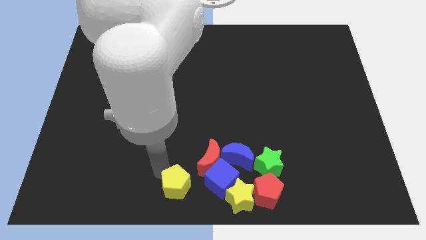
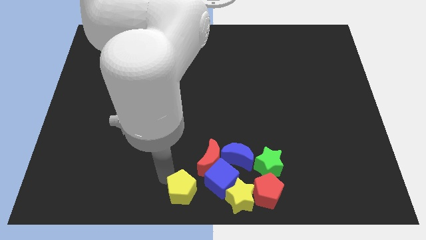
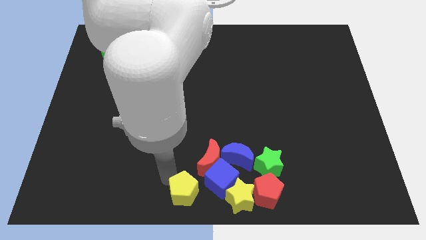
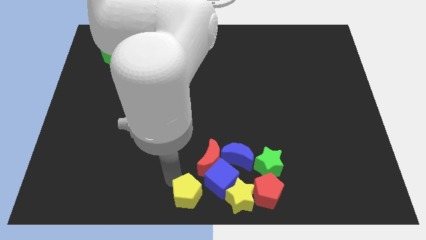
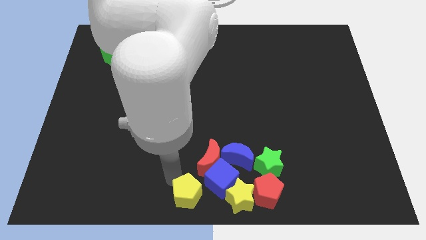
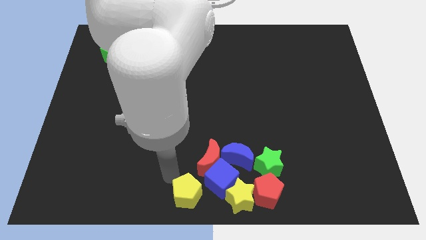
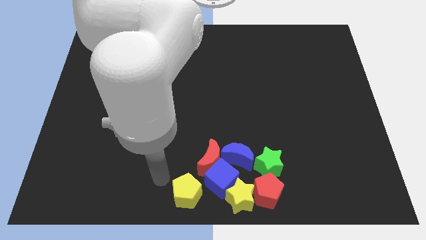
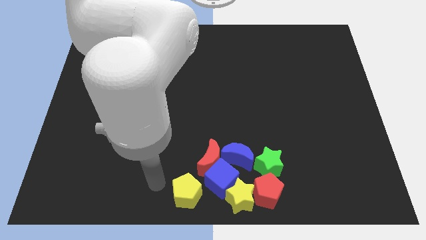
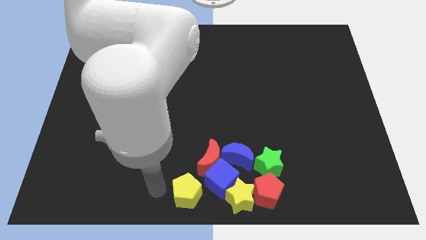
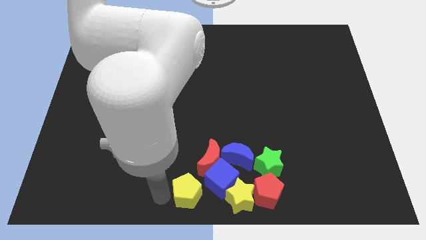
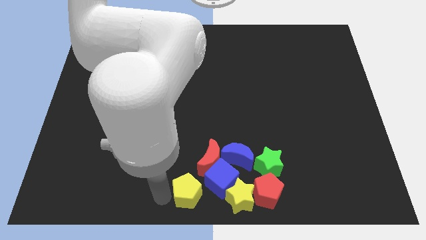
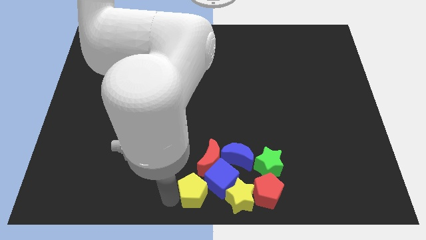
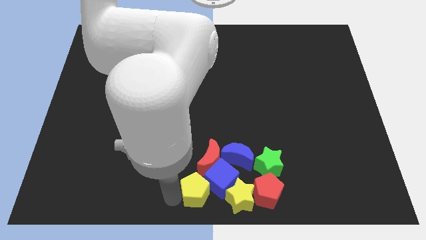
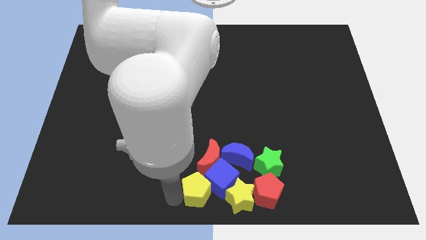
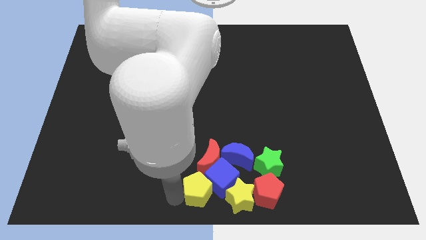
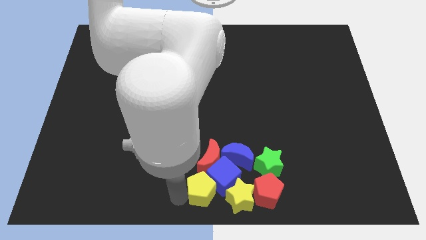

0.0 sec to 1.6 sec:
push the yellow pentagon into the blue cube

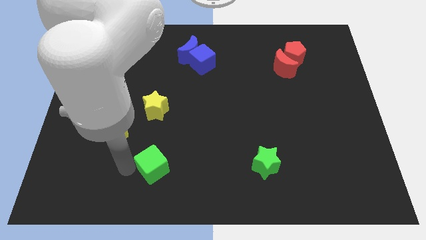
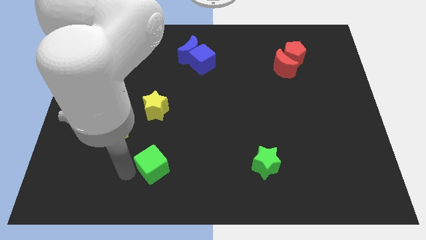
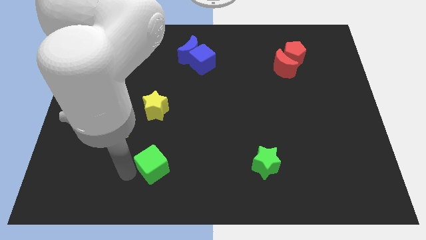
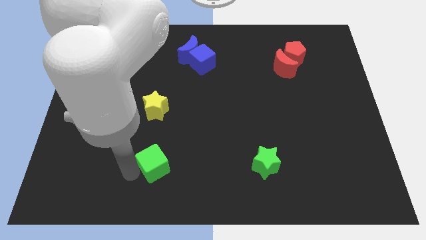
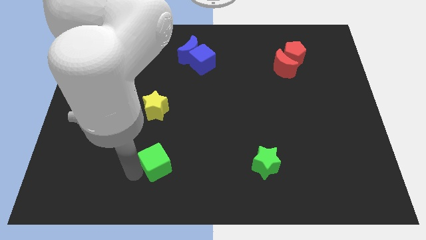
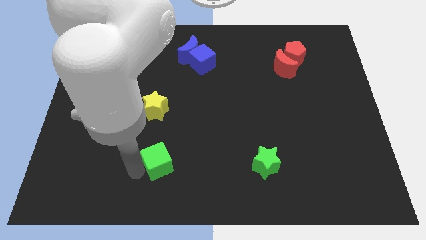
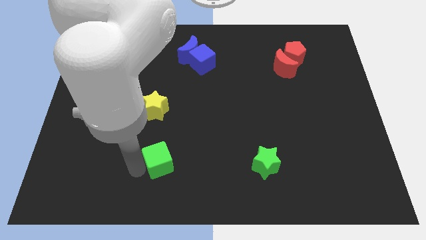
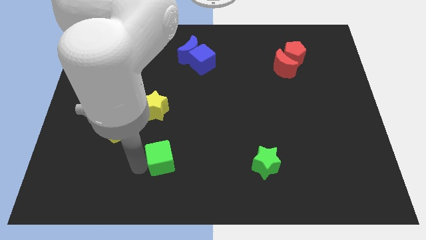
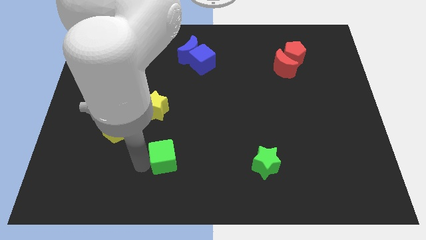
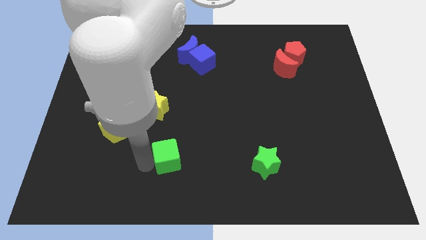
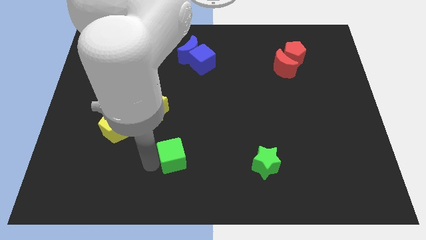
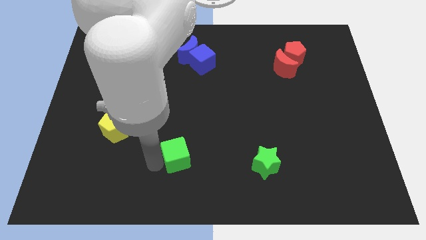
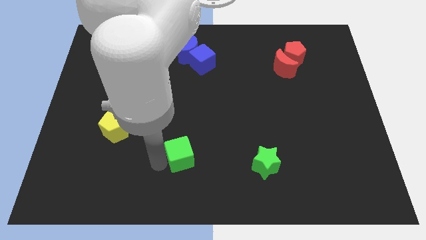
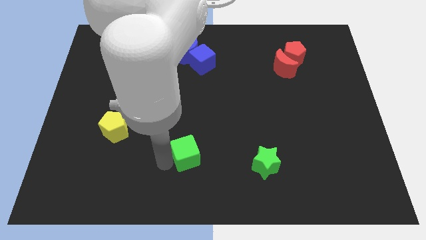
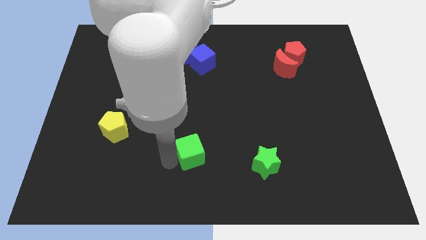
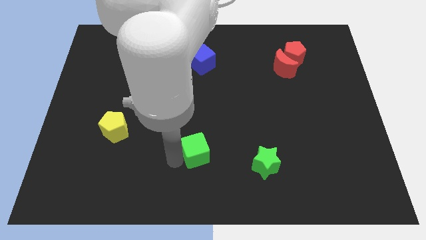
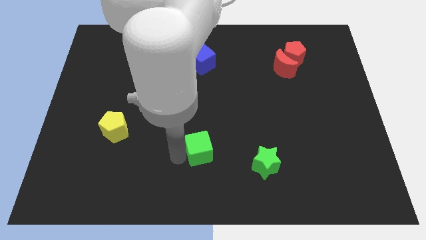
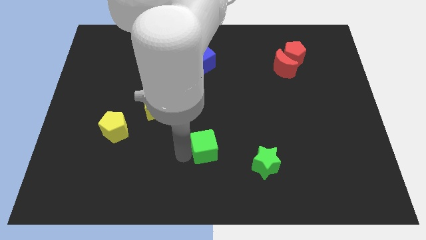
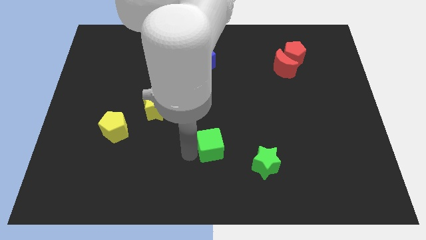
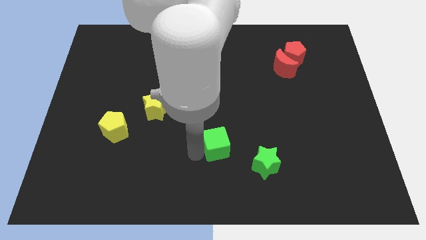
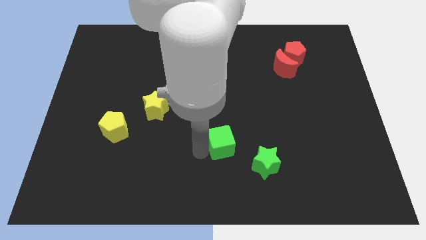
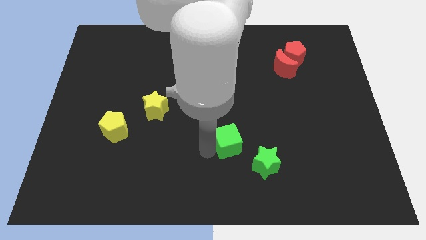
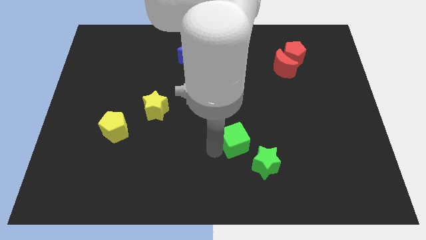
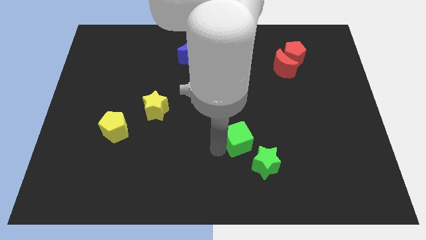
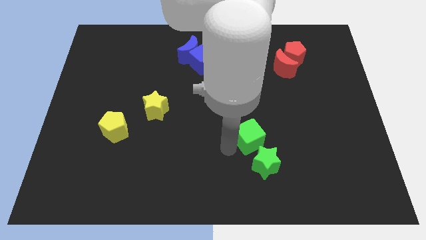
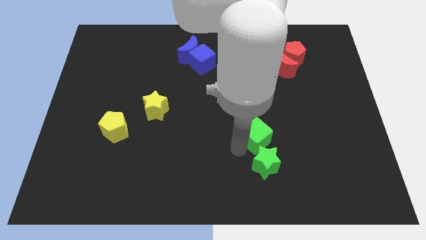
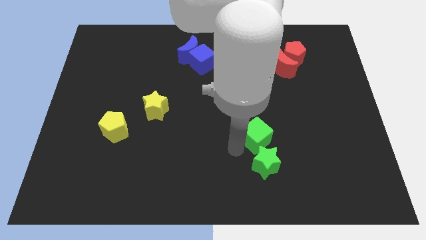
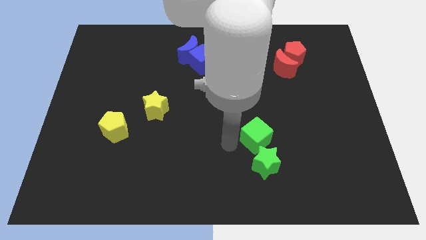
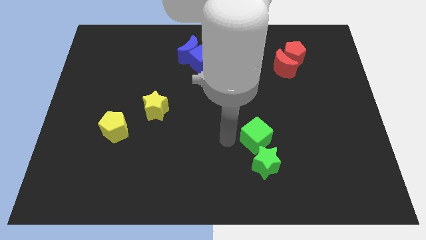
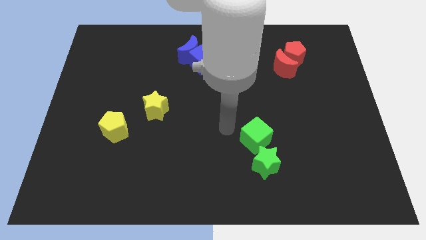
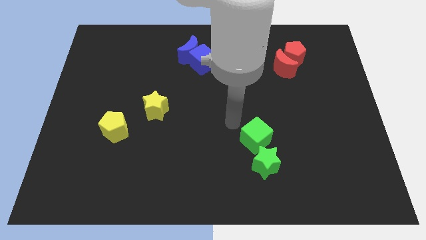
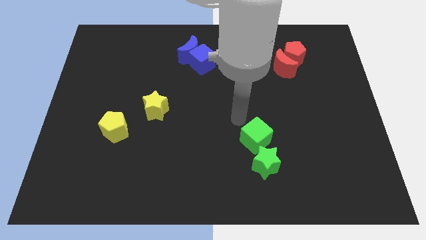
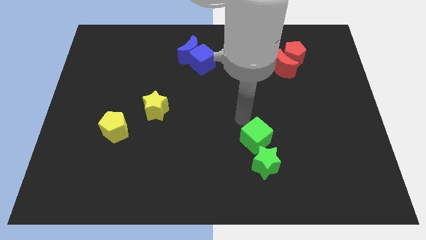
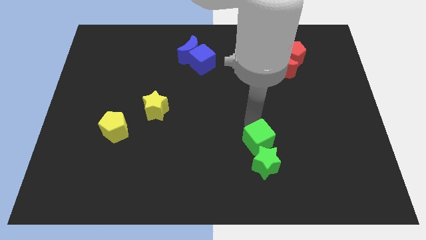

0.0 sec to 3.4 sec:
move the green cube towards the right side of the board

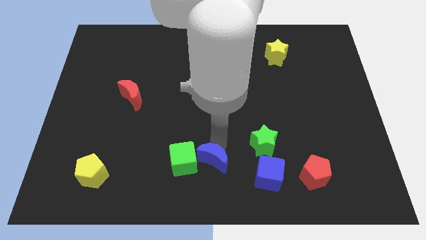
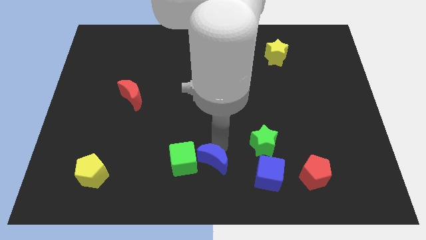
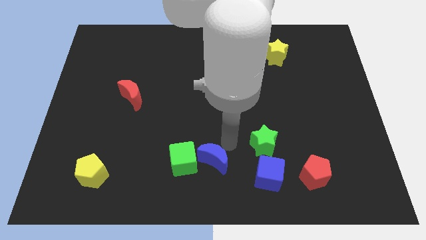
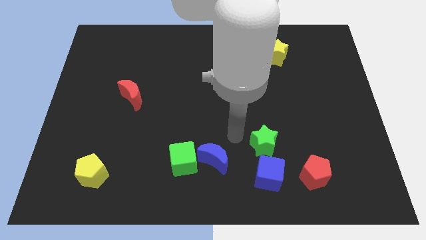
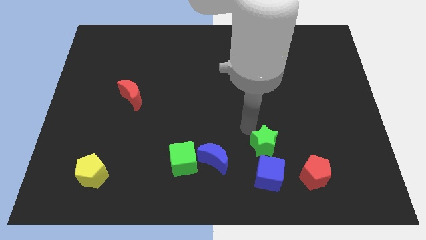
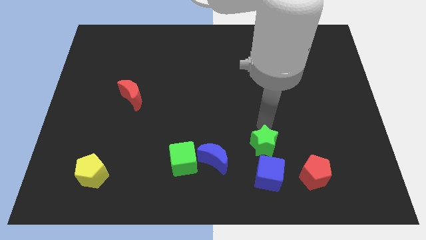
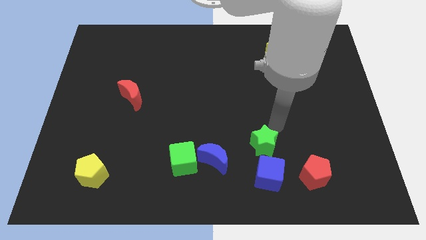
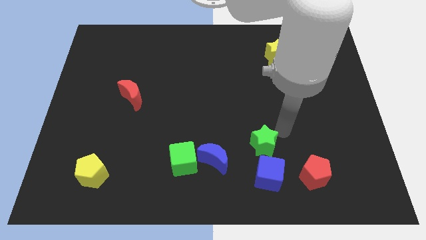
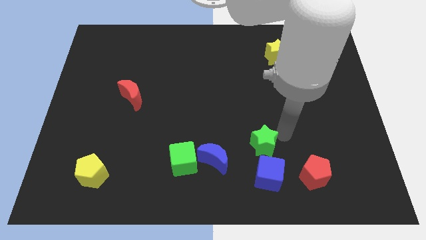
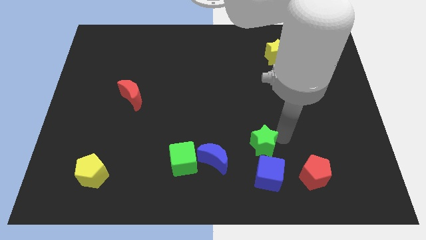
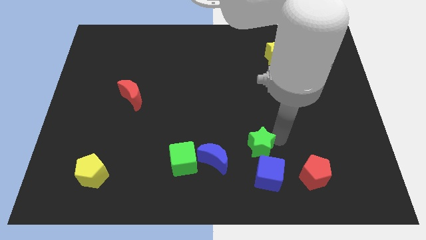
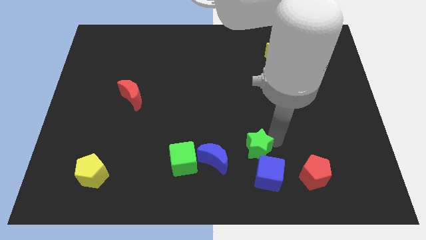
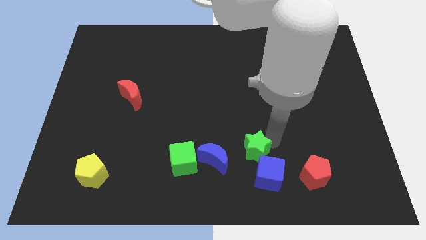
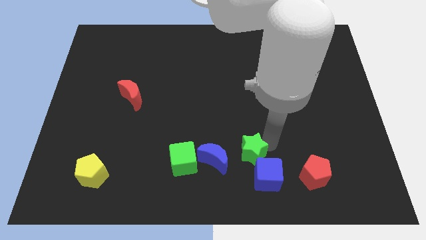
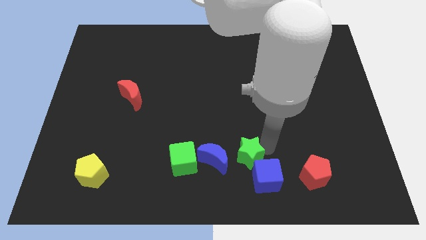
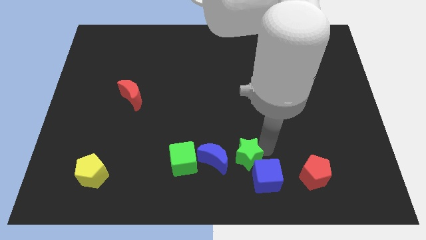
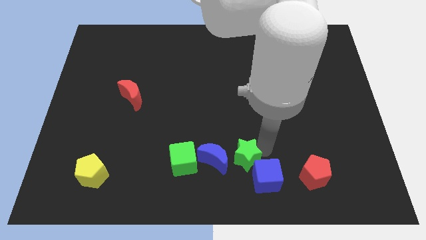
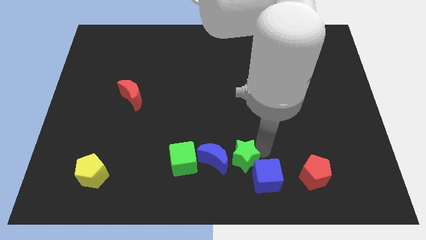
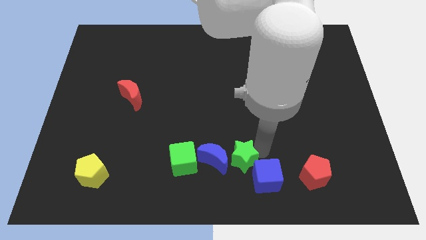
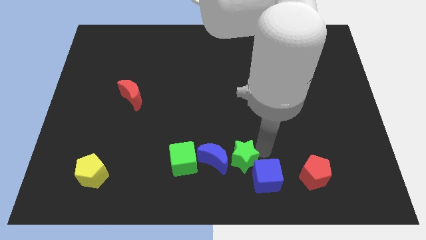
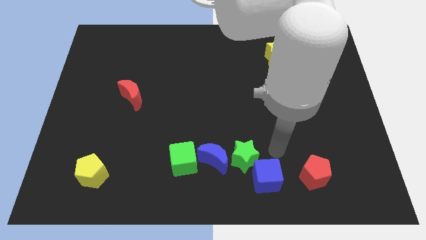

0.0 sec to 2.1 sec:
push the green star towards the blue crescent

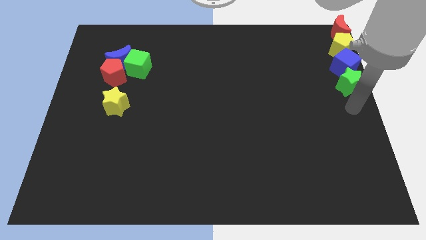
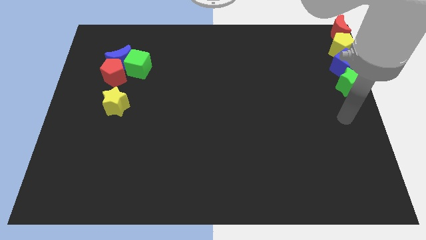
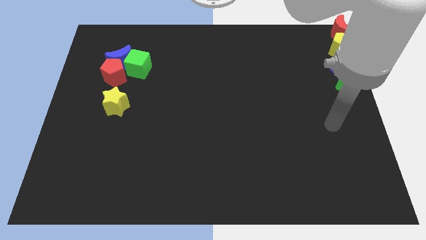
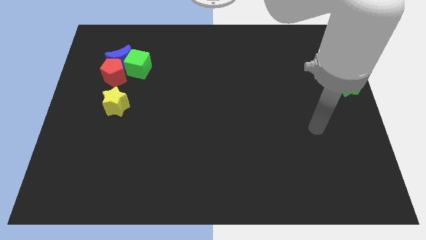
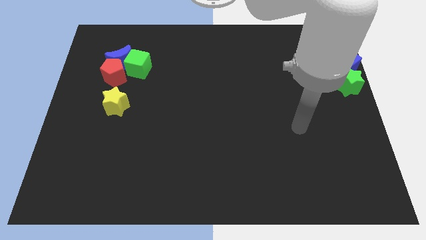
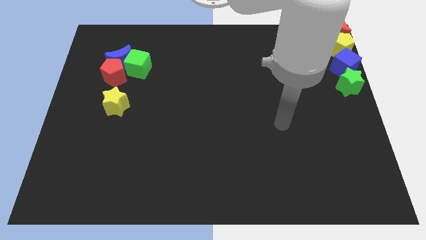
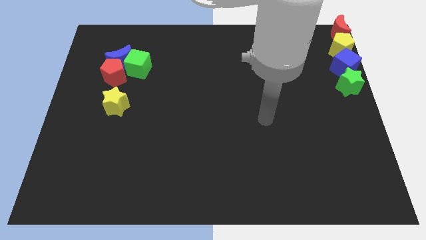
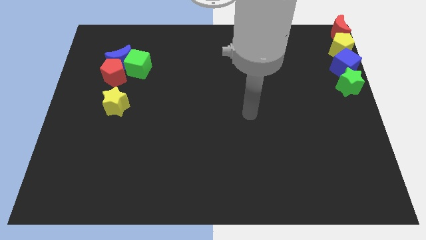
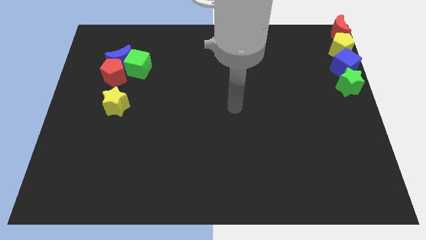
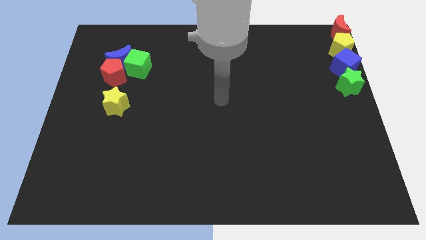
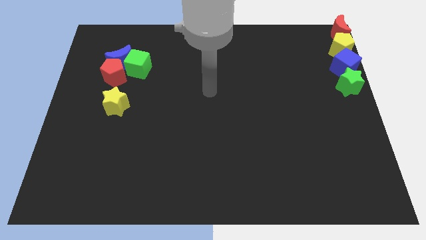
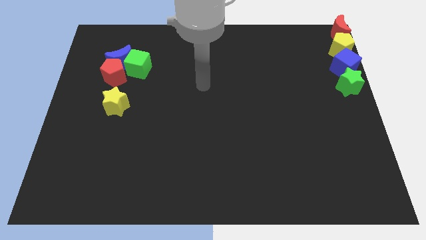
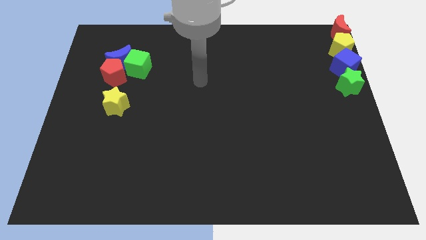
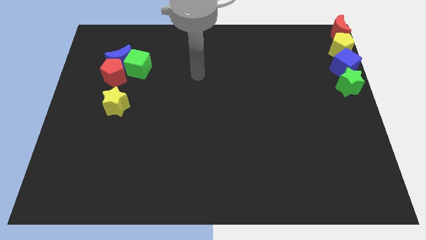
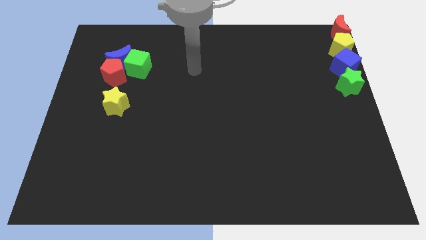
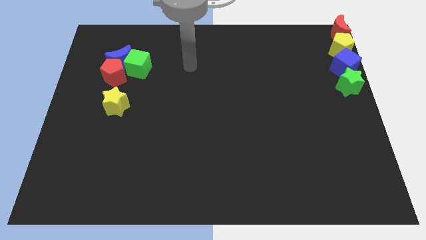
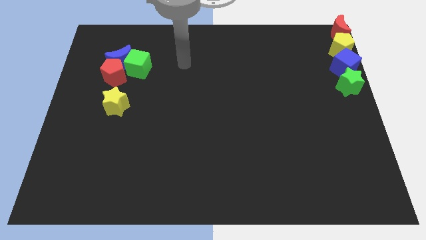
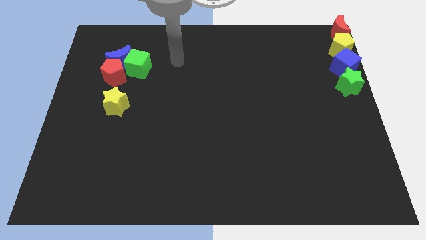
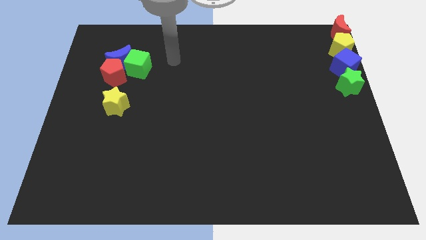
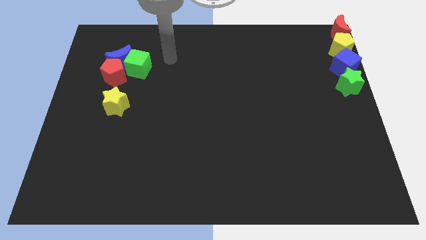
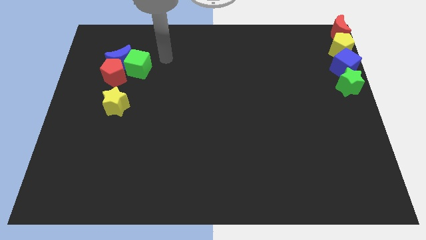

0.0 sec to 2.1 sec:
move your arm away from the green star
